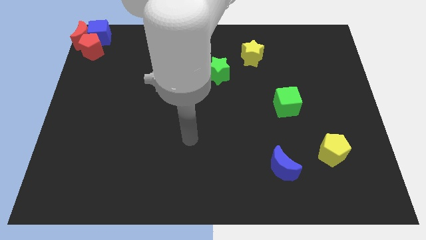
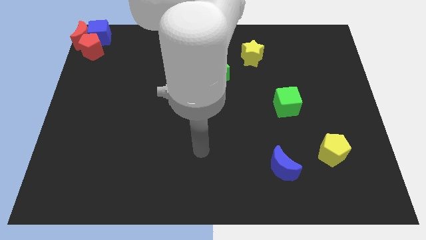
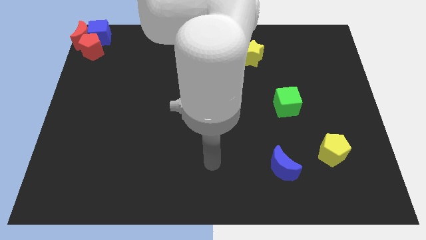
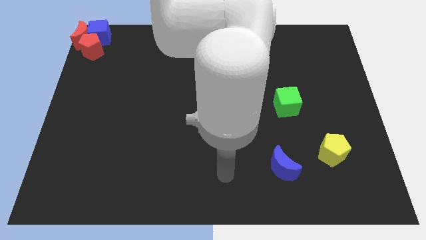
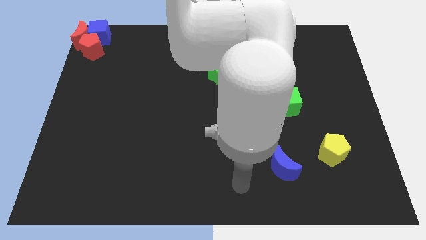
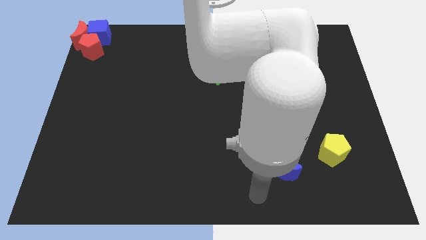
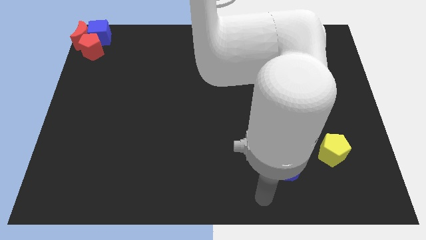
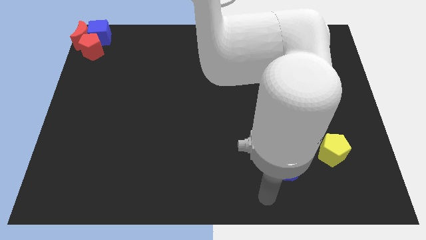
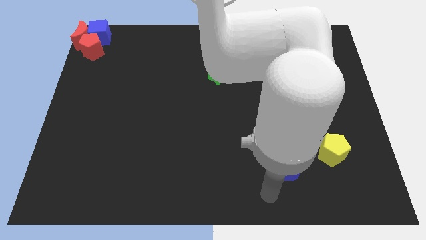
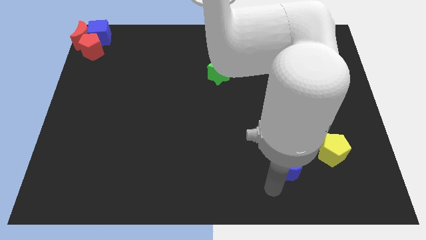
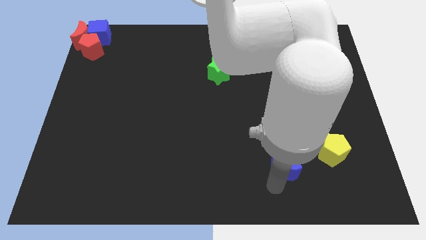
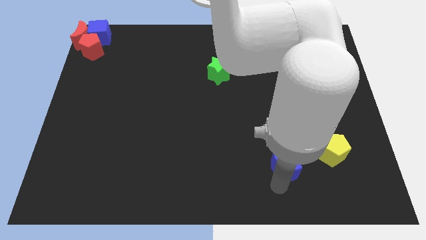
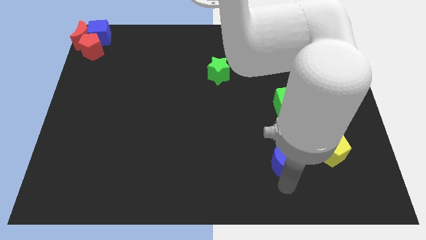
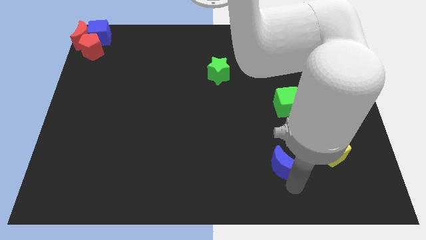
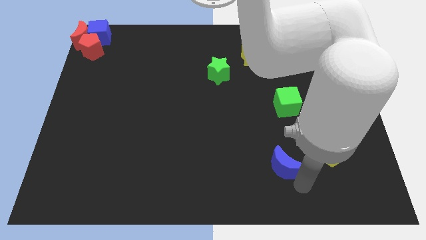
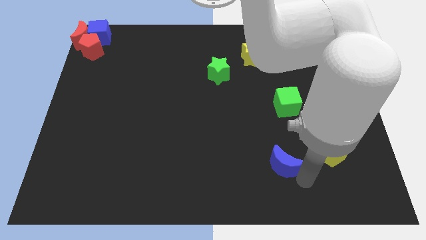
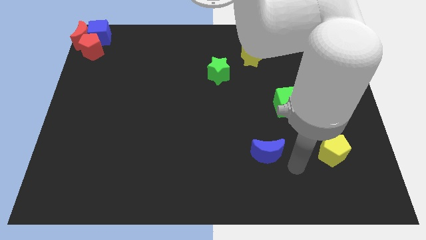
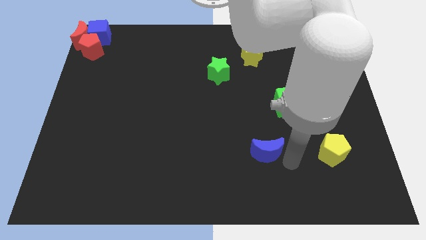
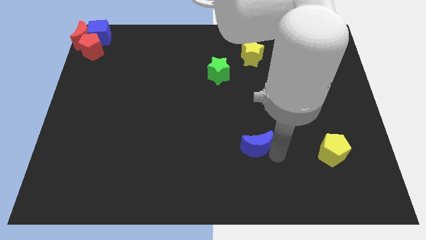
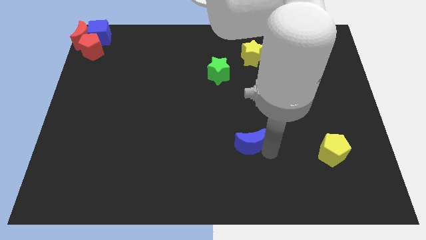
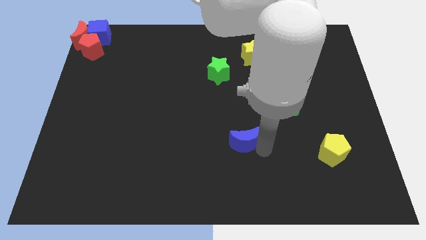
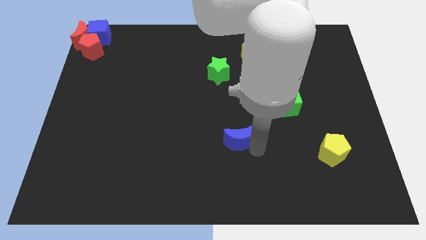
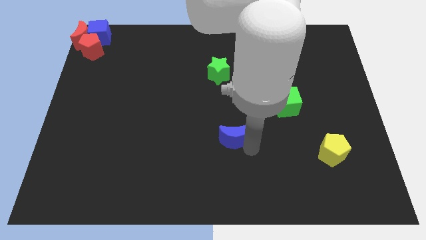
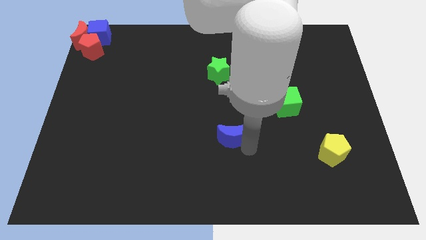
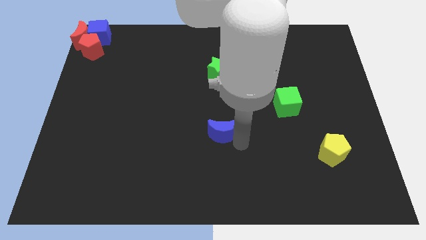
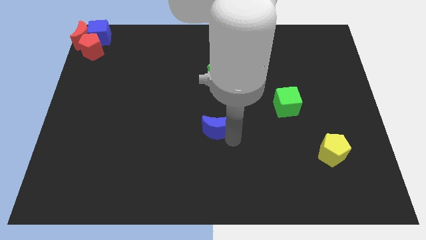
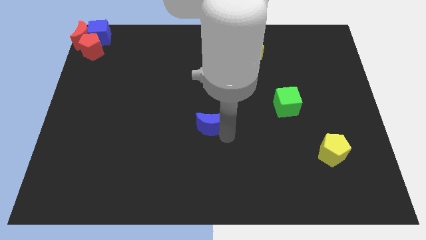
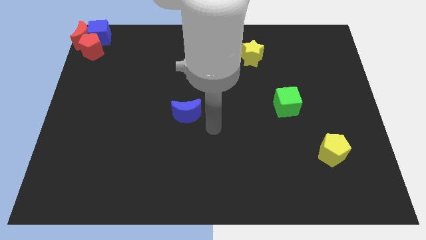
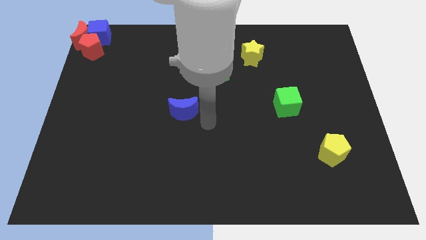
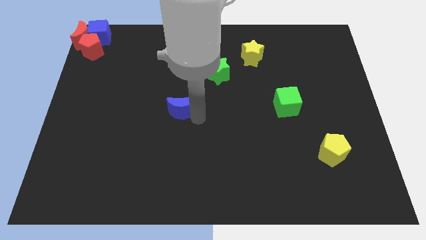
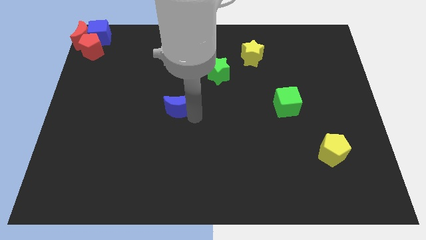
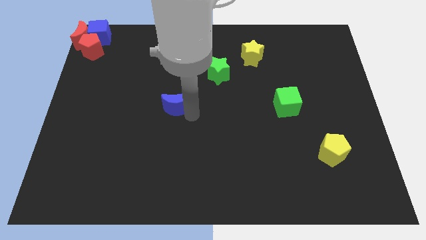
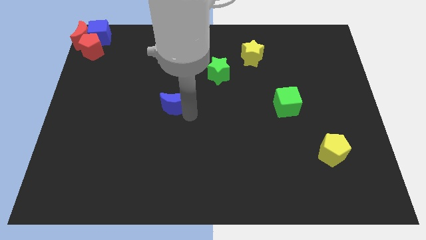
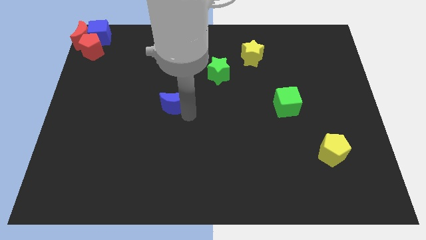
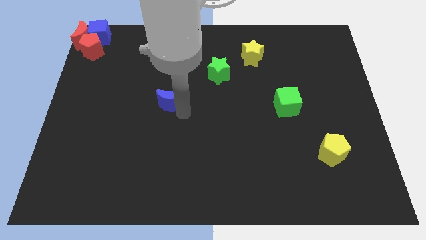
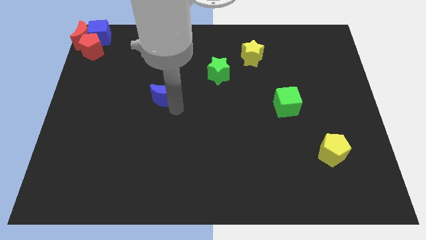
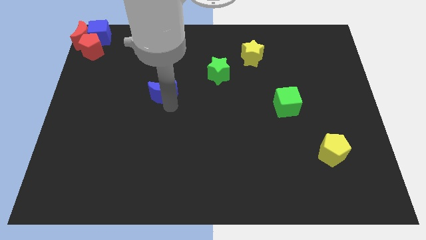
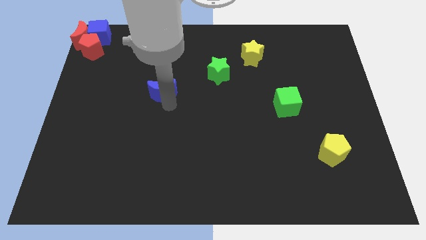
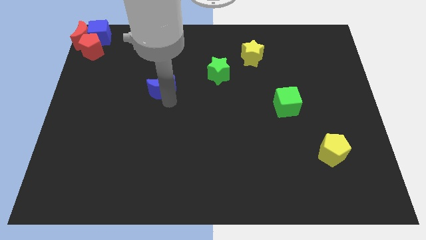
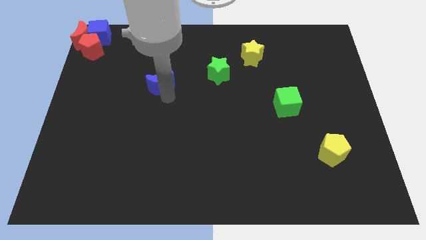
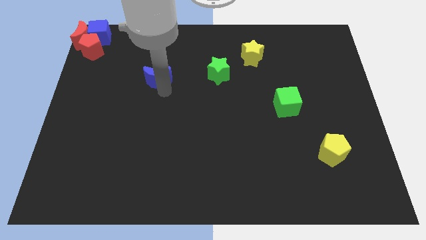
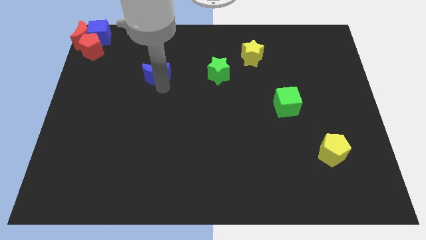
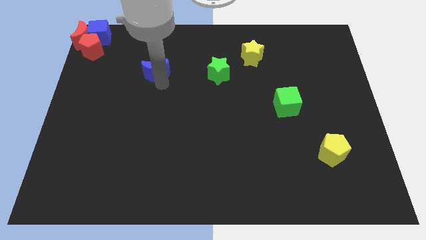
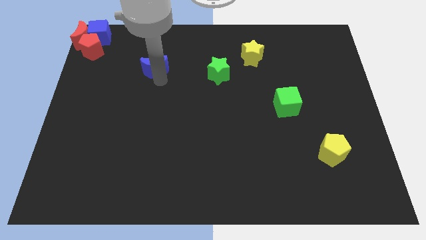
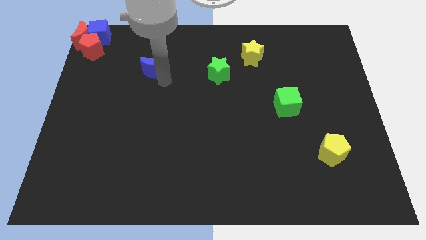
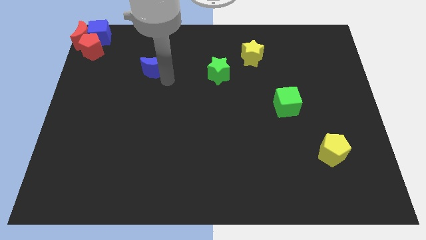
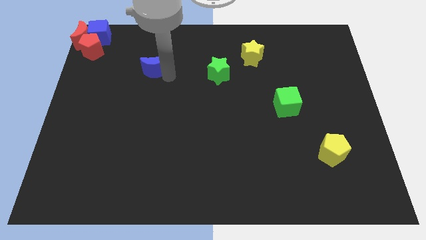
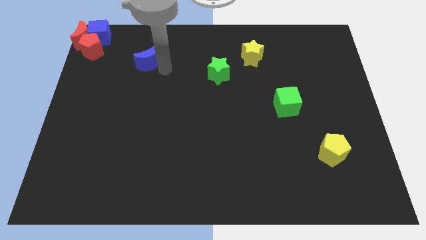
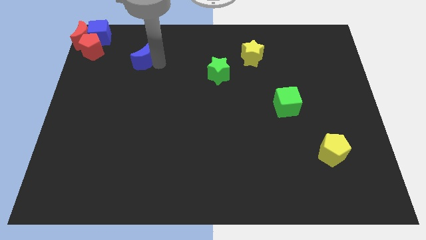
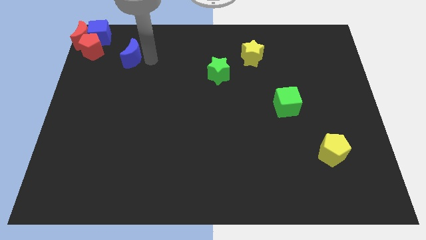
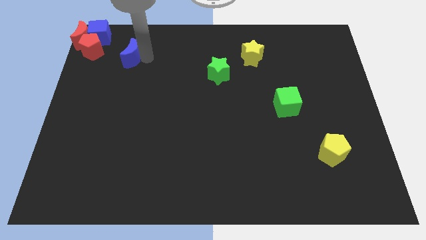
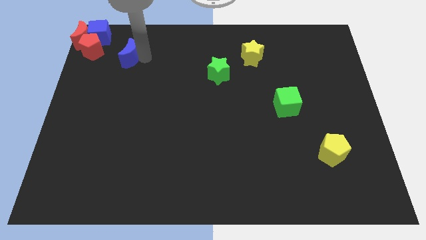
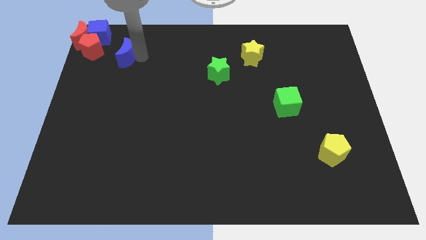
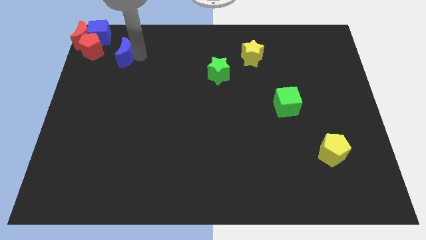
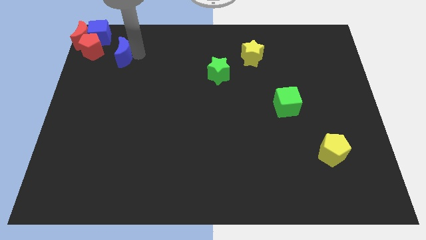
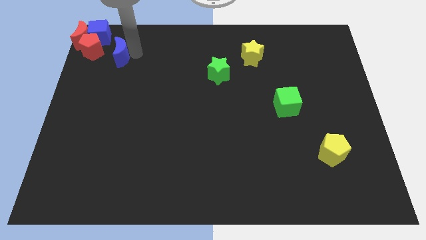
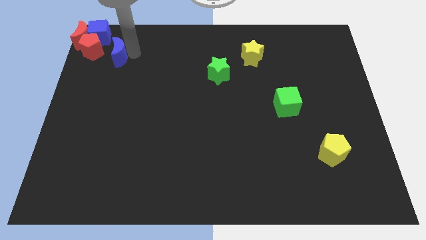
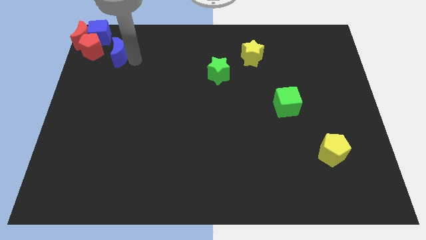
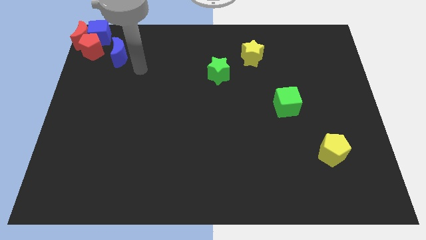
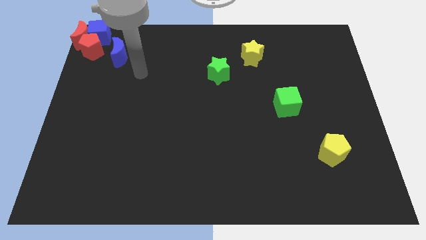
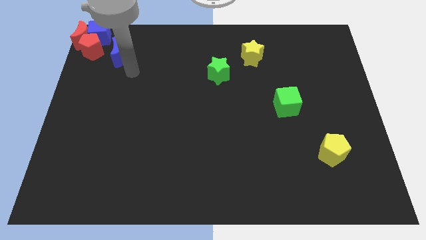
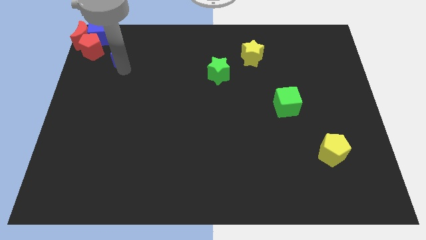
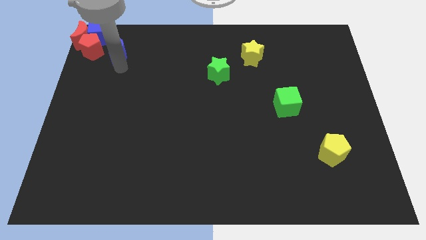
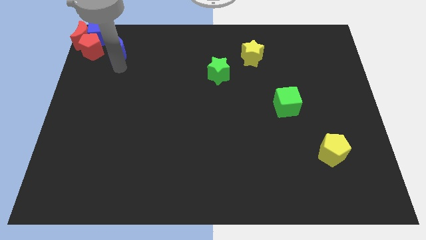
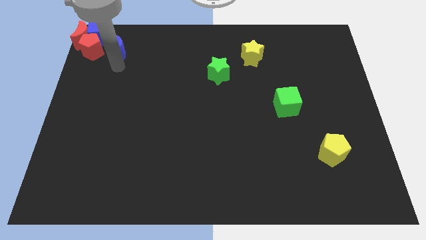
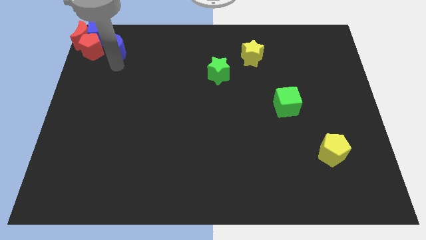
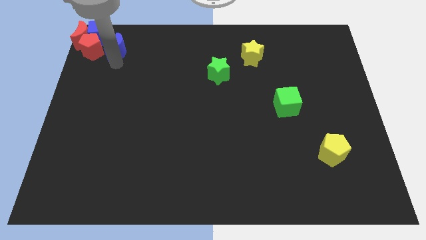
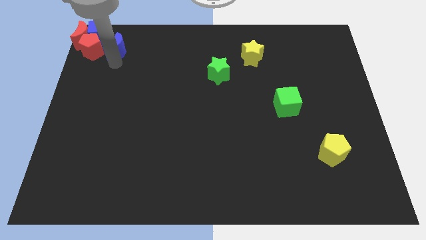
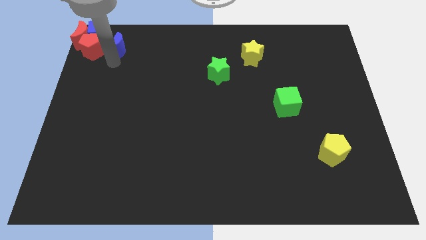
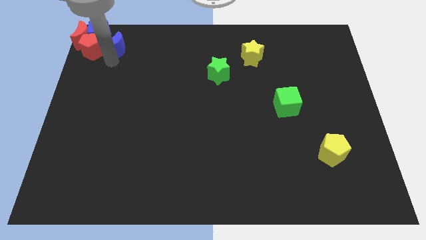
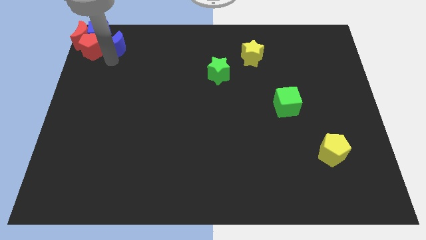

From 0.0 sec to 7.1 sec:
move the blue crescent to the group of blocks

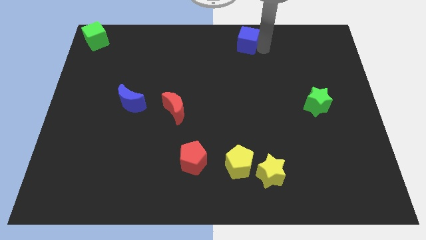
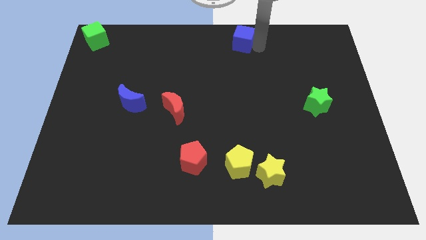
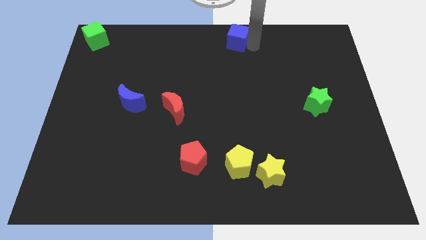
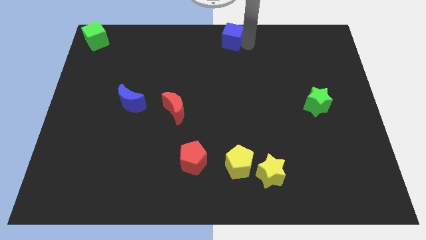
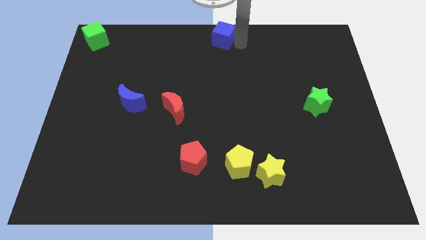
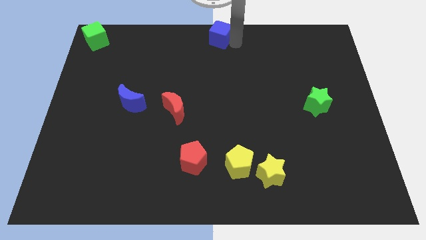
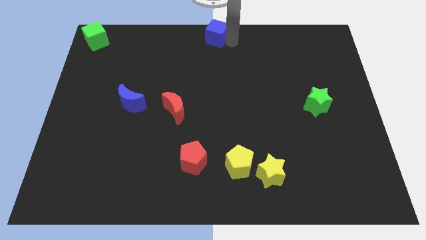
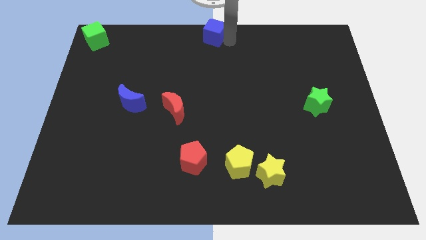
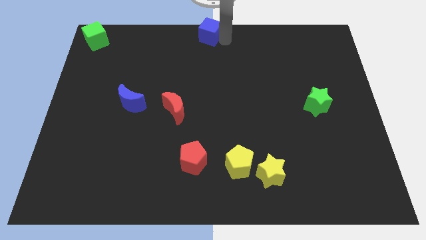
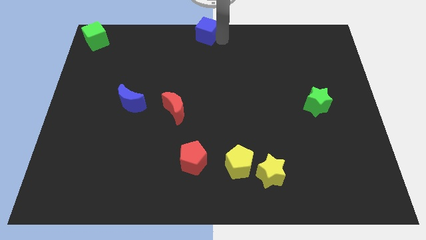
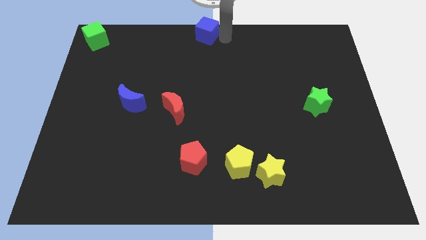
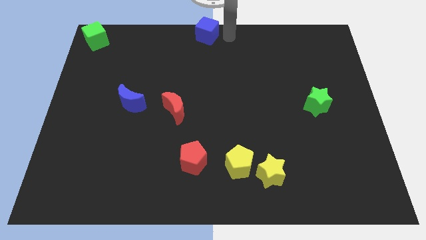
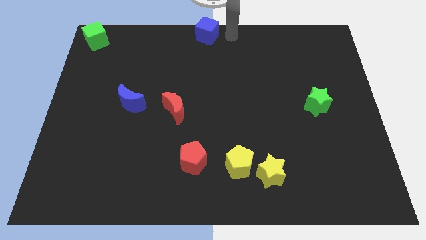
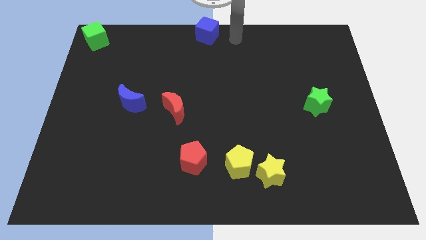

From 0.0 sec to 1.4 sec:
place the blue cube to the top center of the board

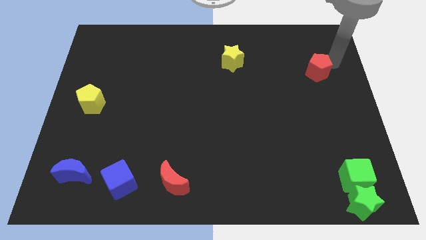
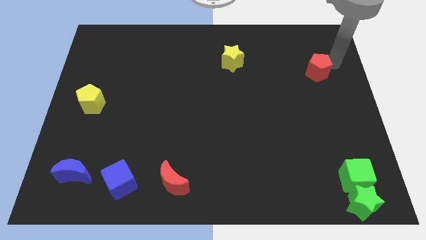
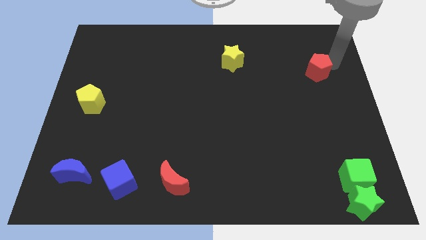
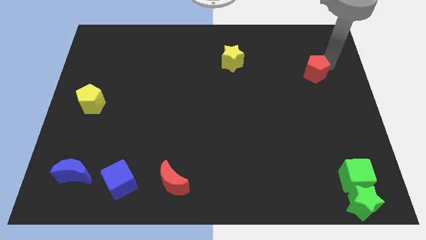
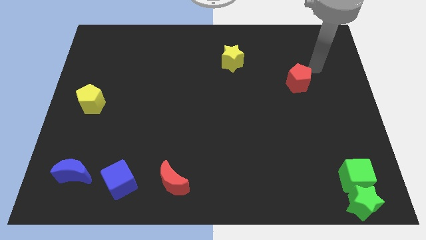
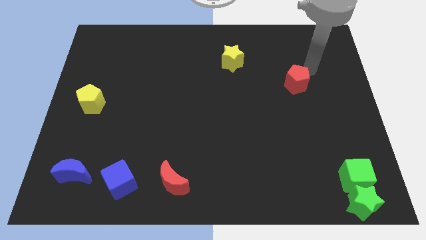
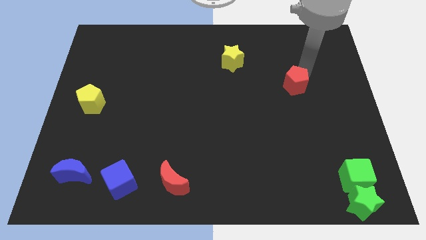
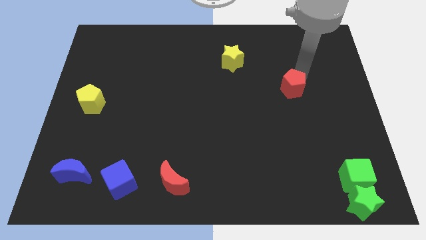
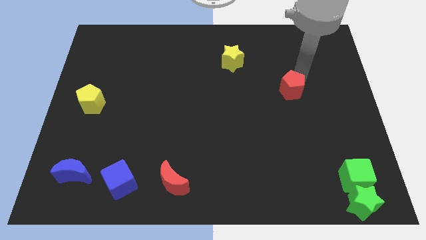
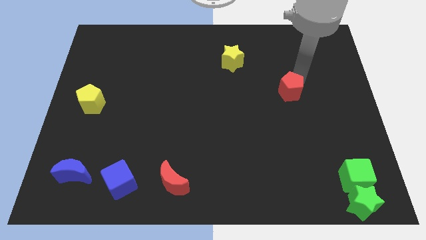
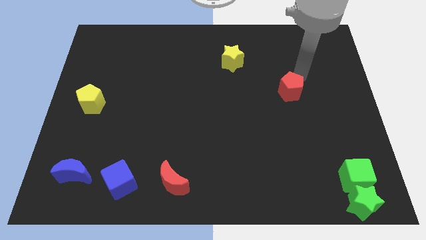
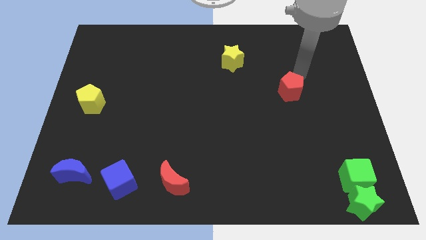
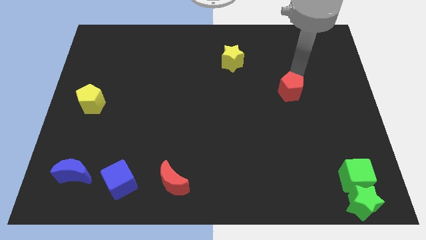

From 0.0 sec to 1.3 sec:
push the red pentagon slightly to the bottom of the board
